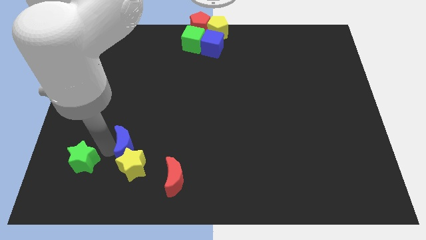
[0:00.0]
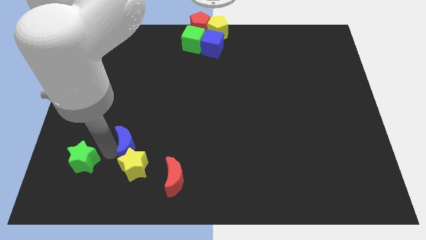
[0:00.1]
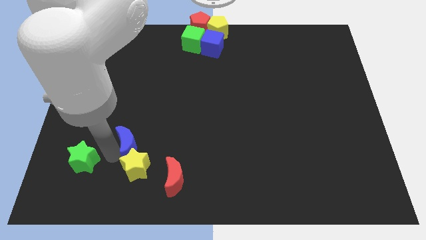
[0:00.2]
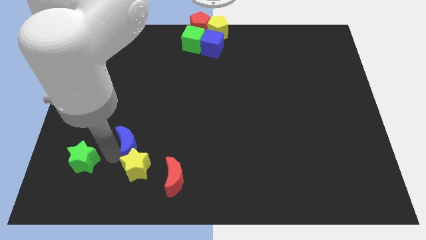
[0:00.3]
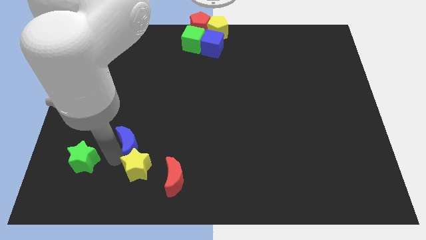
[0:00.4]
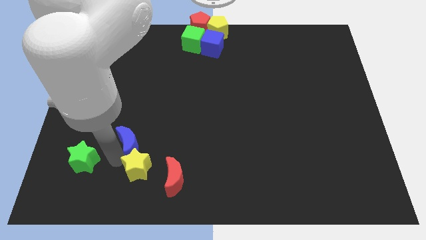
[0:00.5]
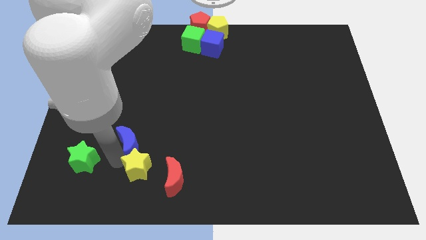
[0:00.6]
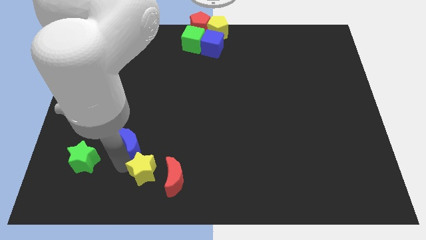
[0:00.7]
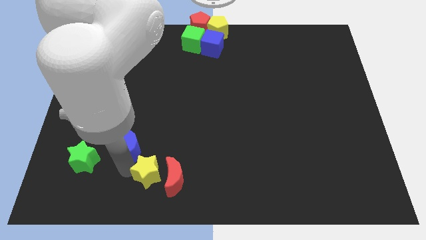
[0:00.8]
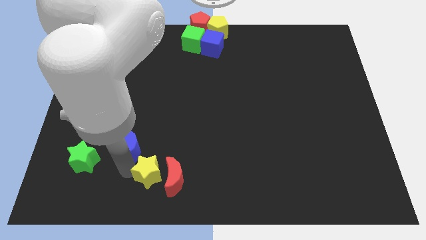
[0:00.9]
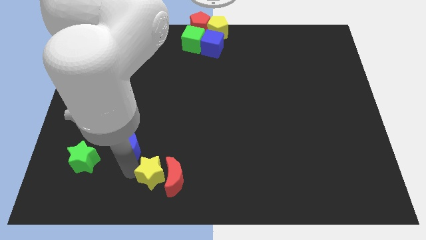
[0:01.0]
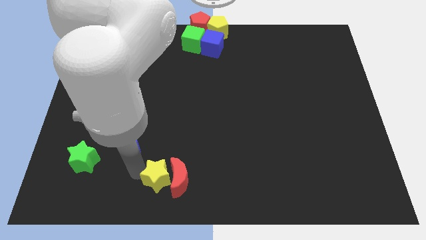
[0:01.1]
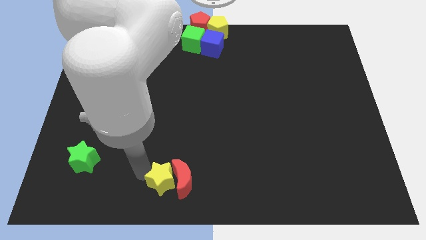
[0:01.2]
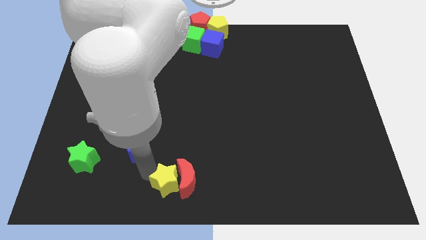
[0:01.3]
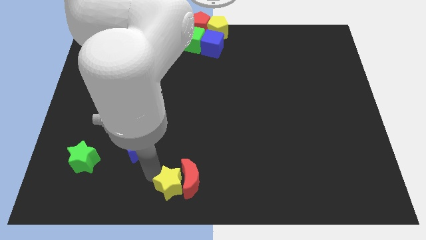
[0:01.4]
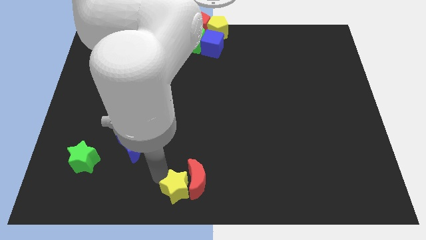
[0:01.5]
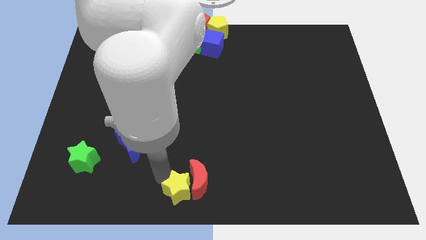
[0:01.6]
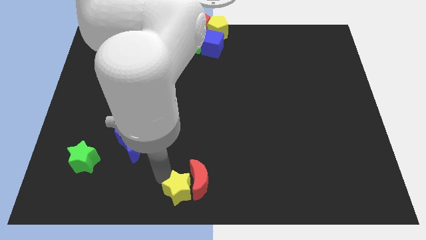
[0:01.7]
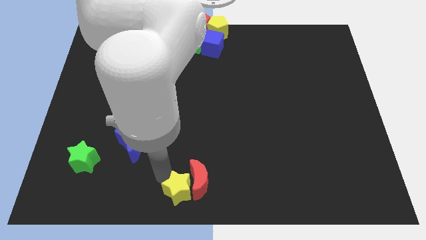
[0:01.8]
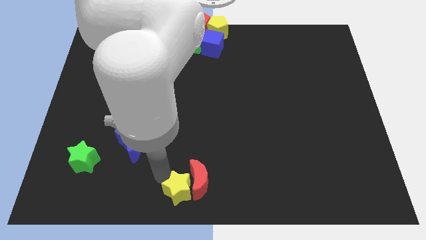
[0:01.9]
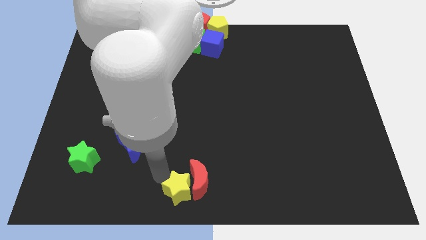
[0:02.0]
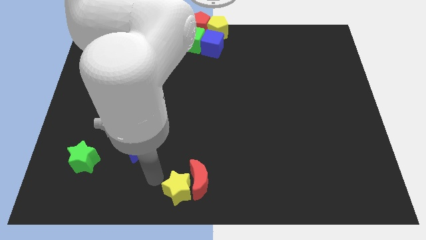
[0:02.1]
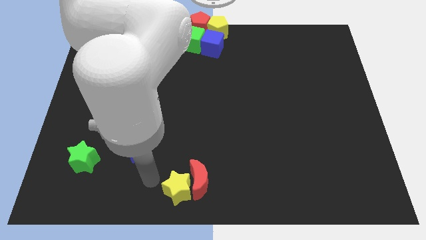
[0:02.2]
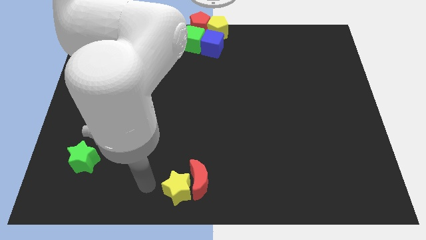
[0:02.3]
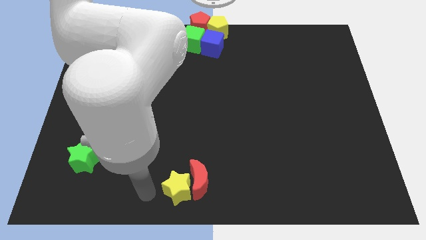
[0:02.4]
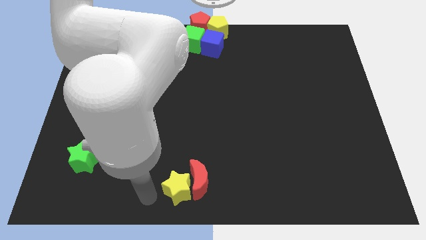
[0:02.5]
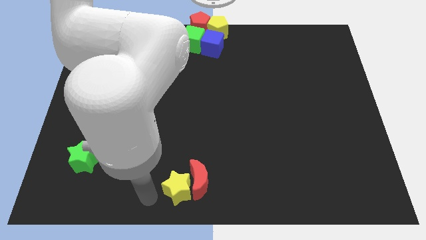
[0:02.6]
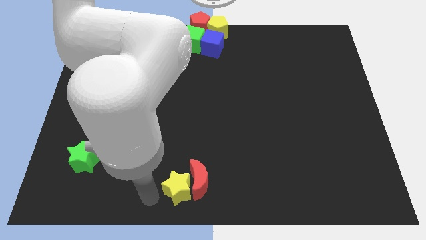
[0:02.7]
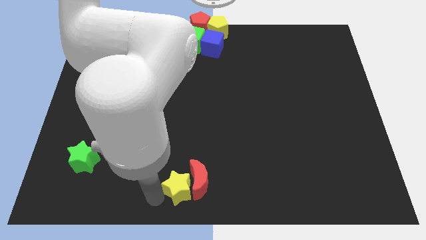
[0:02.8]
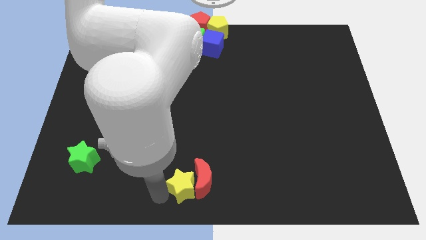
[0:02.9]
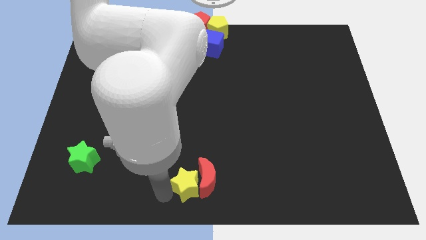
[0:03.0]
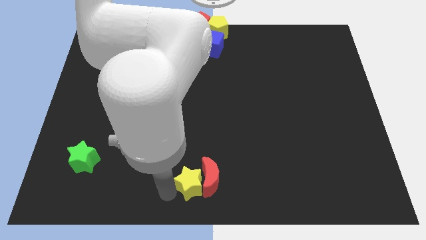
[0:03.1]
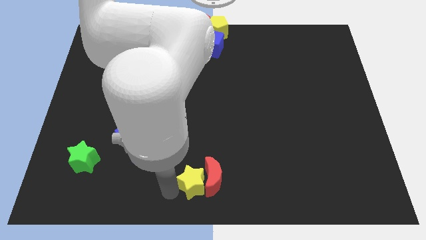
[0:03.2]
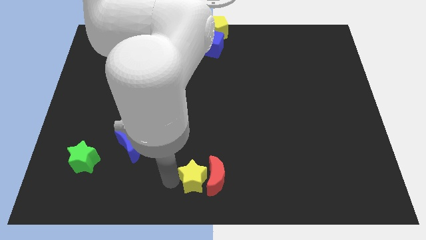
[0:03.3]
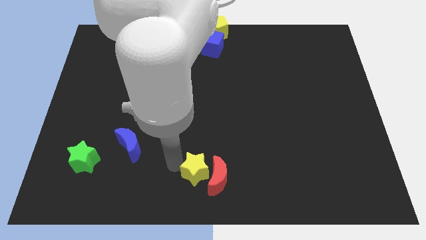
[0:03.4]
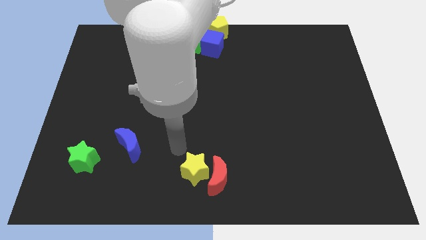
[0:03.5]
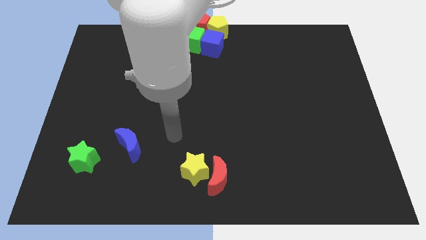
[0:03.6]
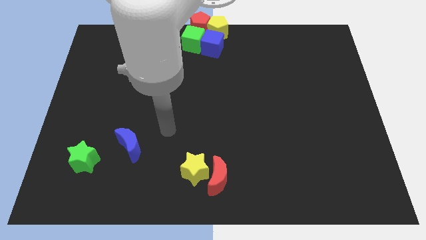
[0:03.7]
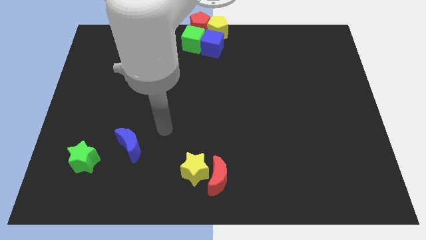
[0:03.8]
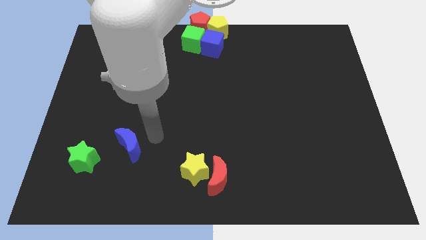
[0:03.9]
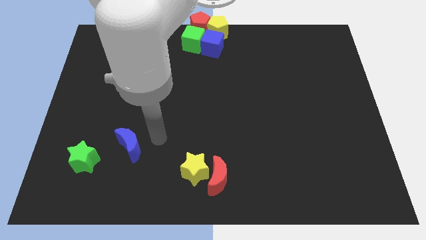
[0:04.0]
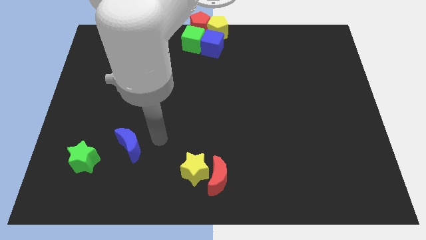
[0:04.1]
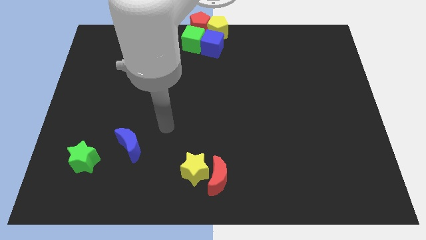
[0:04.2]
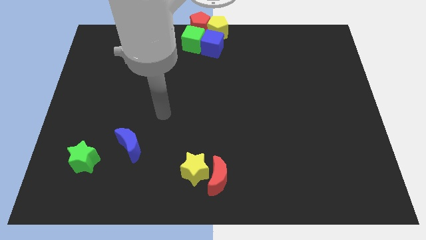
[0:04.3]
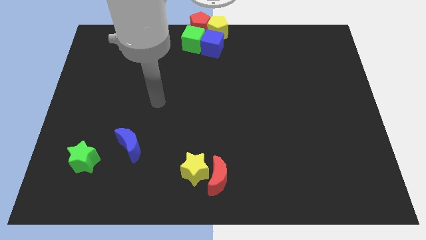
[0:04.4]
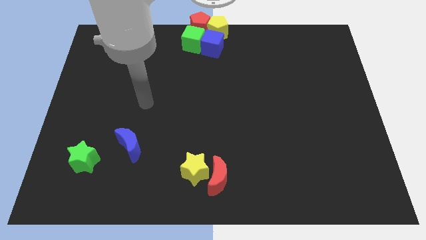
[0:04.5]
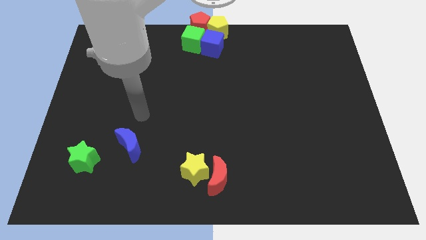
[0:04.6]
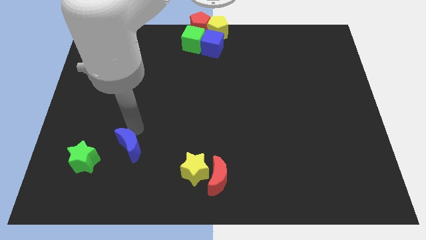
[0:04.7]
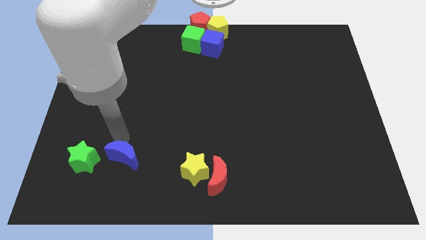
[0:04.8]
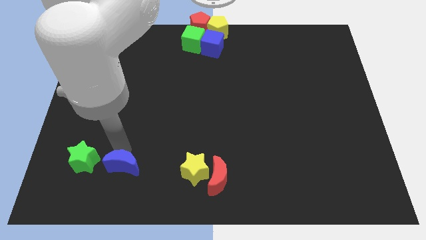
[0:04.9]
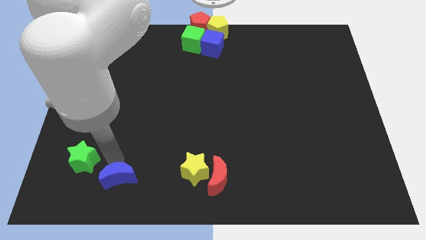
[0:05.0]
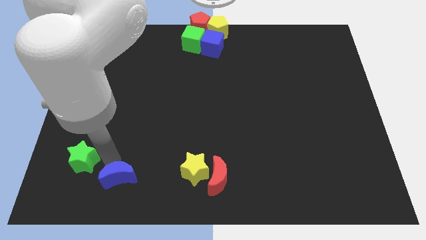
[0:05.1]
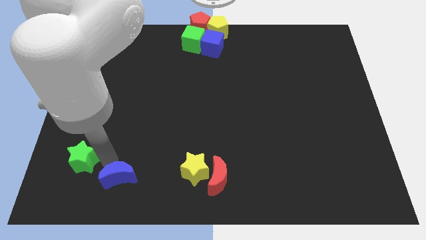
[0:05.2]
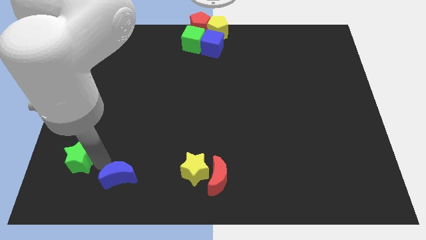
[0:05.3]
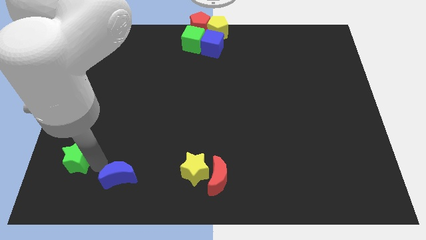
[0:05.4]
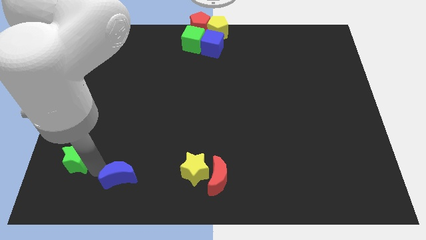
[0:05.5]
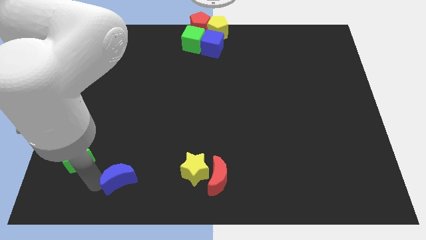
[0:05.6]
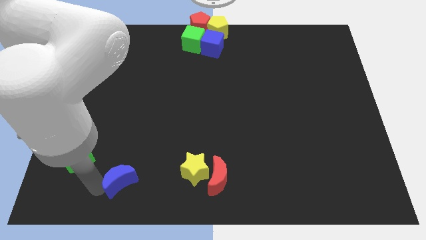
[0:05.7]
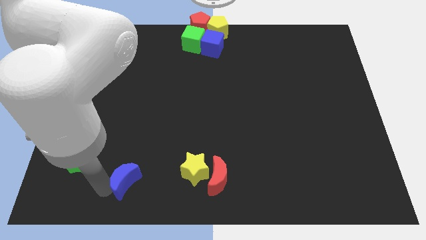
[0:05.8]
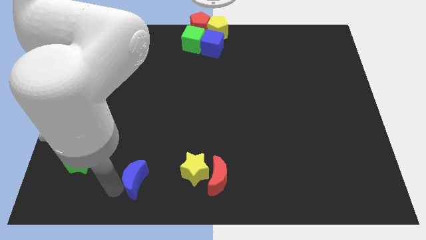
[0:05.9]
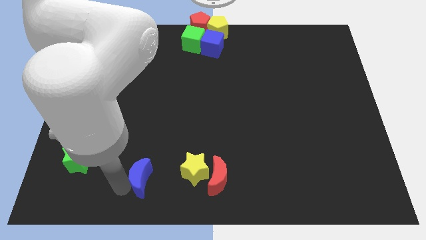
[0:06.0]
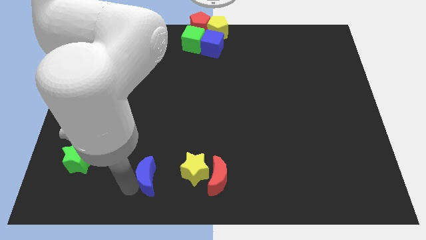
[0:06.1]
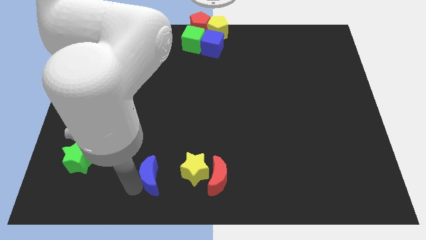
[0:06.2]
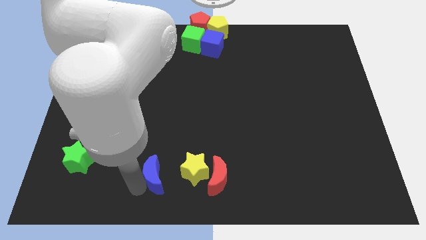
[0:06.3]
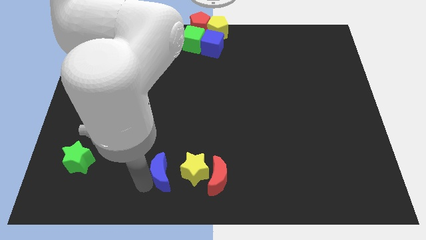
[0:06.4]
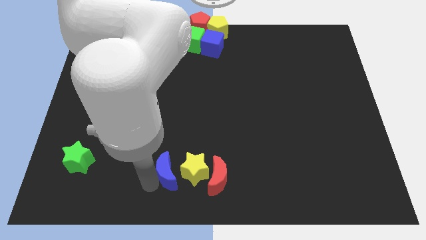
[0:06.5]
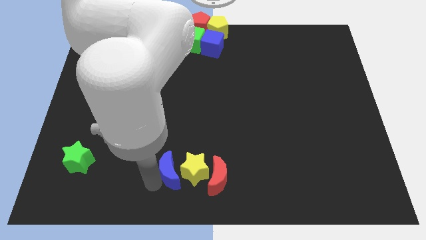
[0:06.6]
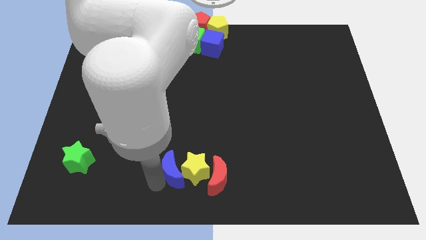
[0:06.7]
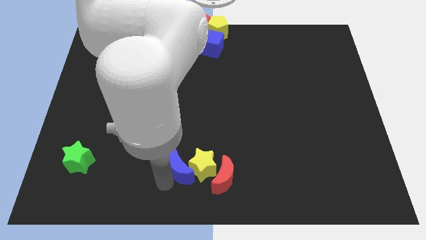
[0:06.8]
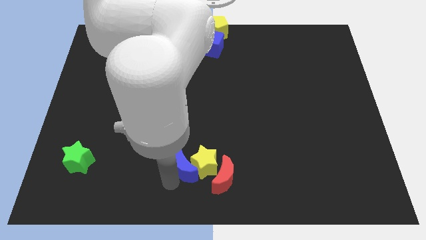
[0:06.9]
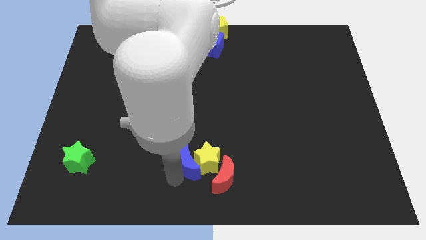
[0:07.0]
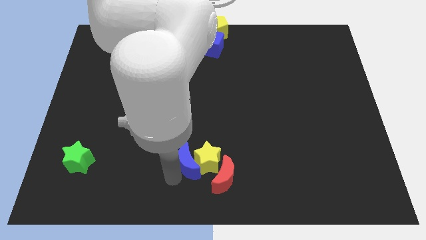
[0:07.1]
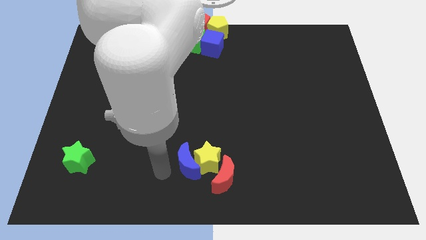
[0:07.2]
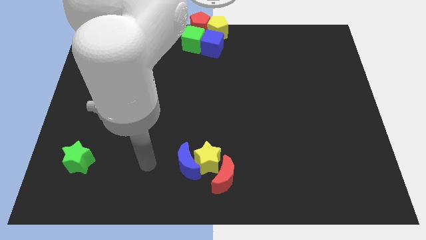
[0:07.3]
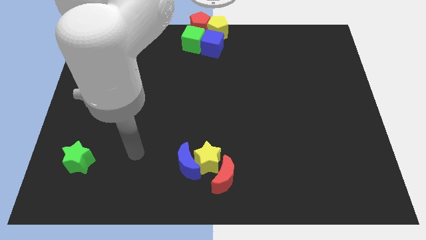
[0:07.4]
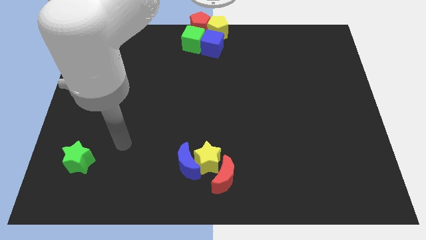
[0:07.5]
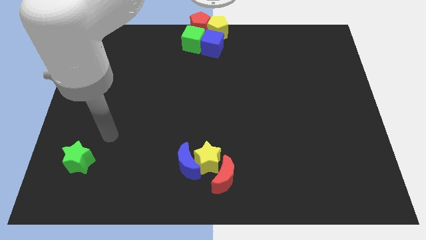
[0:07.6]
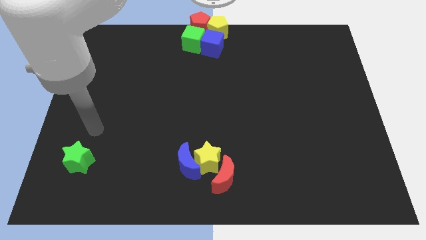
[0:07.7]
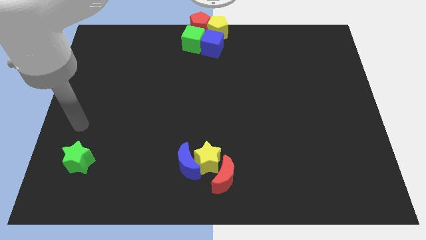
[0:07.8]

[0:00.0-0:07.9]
group up the blue moon yellow star and red moon together at the bottom center of the board

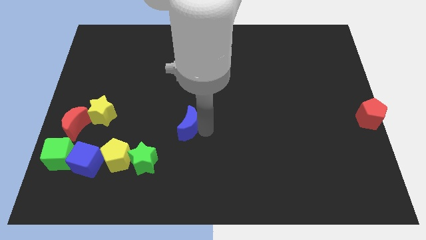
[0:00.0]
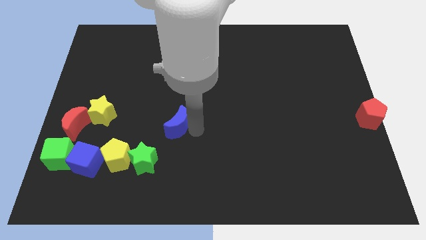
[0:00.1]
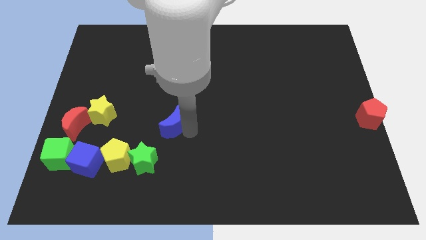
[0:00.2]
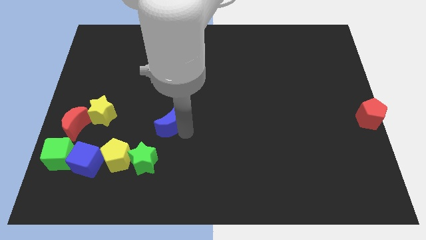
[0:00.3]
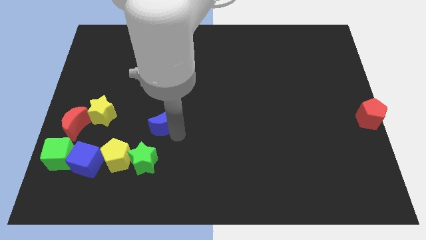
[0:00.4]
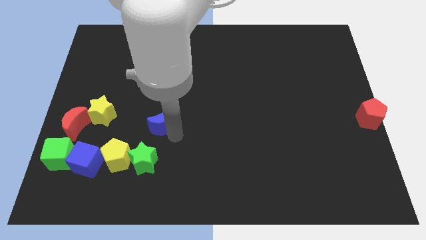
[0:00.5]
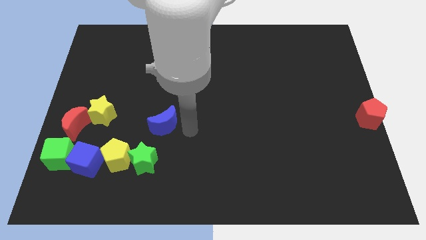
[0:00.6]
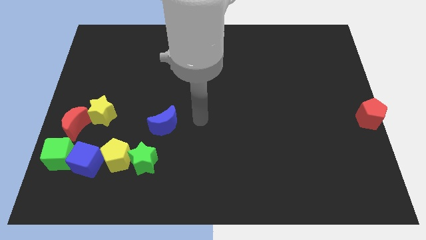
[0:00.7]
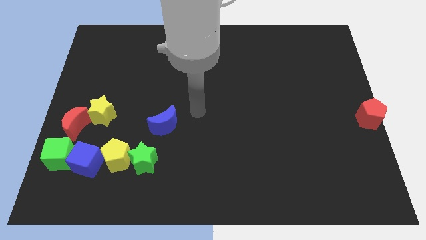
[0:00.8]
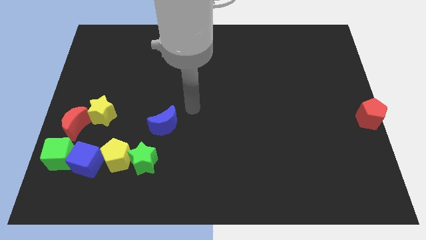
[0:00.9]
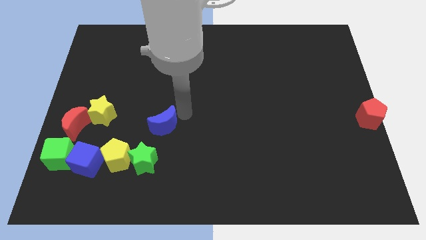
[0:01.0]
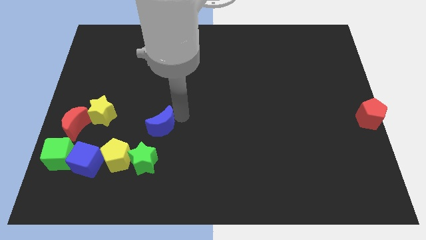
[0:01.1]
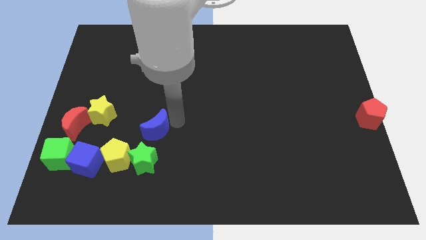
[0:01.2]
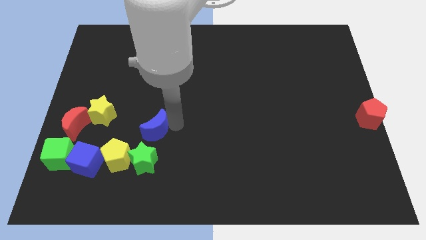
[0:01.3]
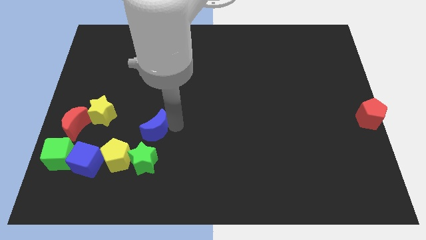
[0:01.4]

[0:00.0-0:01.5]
place the blue moon above the green star
